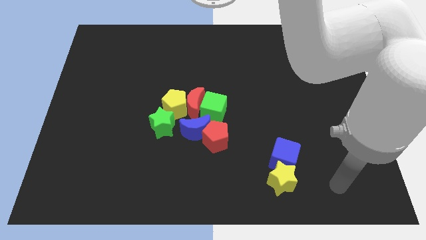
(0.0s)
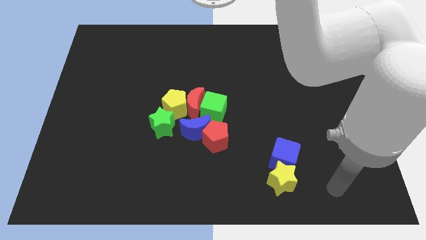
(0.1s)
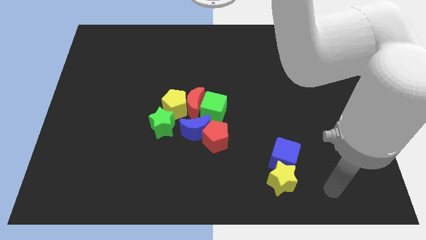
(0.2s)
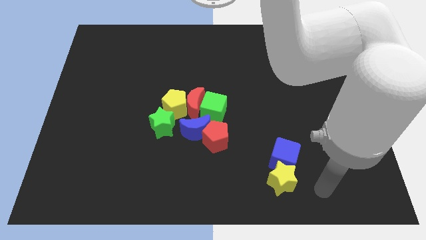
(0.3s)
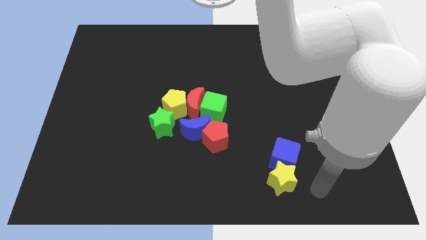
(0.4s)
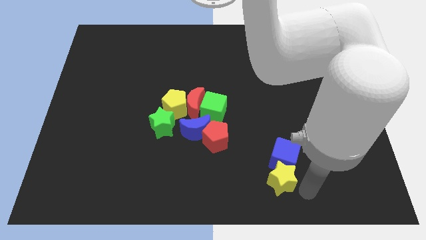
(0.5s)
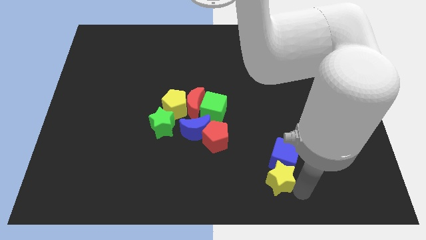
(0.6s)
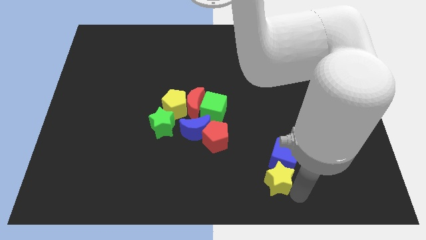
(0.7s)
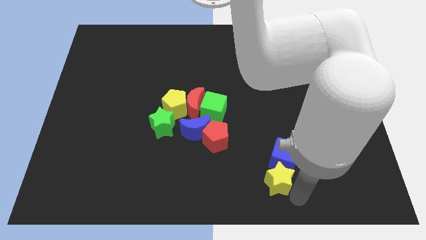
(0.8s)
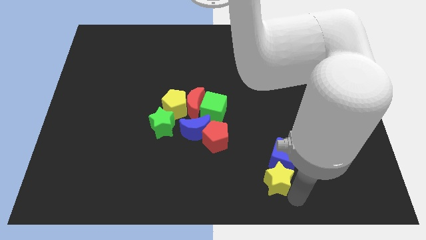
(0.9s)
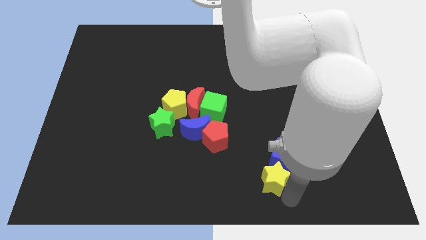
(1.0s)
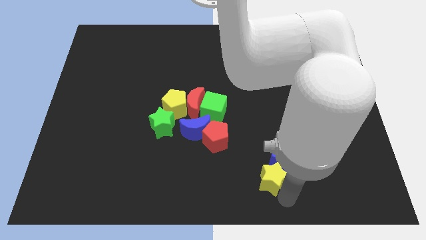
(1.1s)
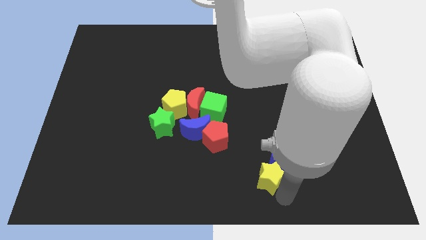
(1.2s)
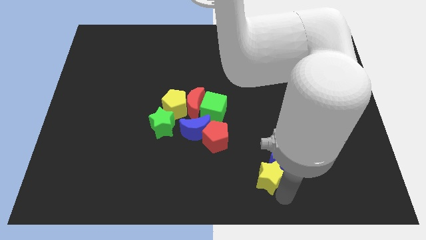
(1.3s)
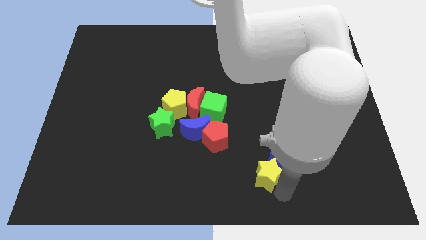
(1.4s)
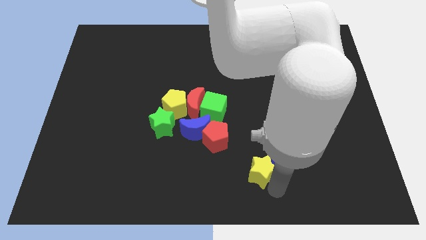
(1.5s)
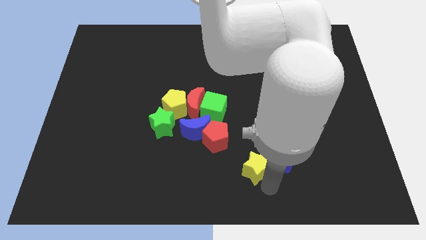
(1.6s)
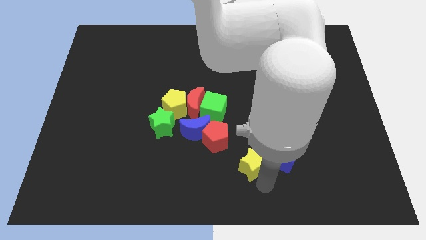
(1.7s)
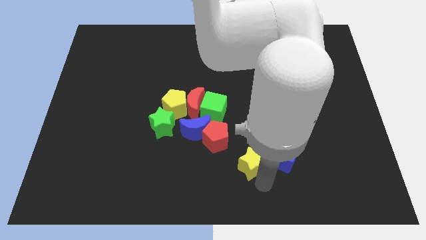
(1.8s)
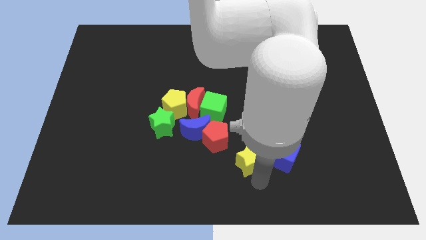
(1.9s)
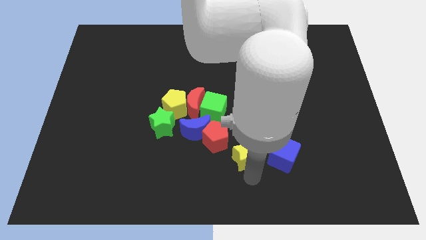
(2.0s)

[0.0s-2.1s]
move the yellow star away from the blue cube

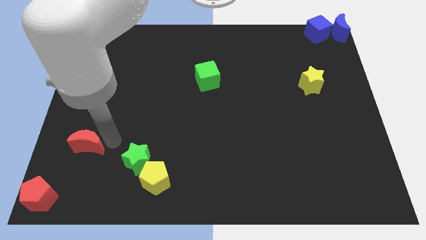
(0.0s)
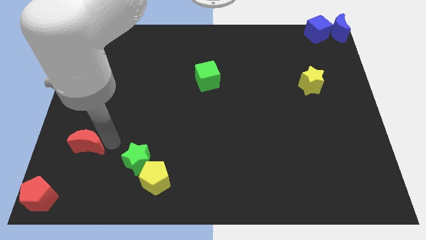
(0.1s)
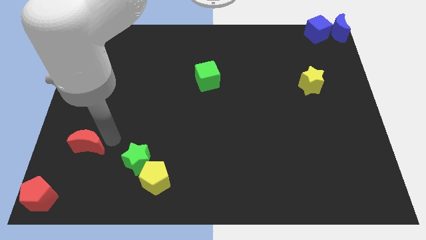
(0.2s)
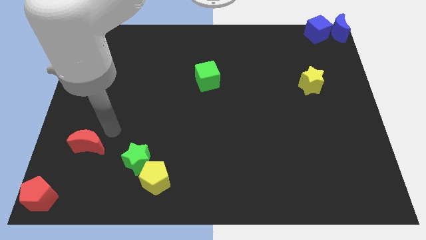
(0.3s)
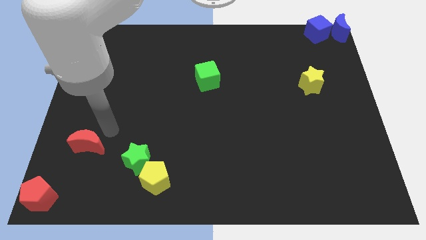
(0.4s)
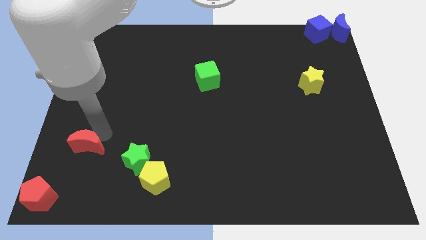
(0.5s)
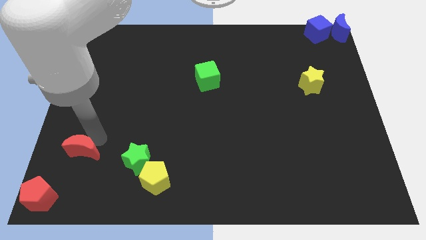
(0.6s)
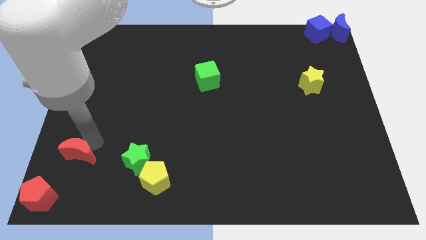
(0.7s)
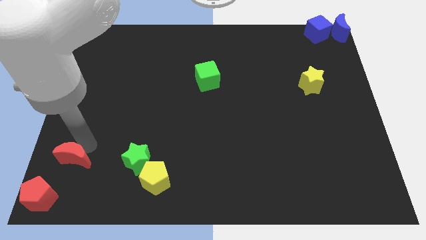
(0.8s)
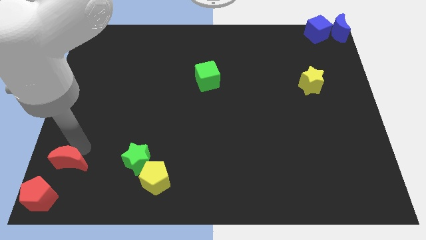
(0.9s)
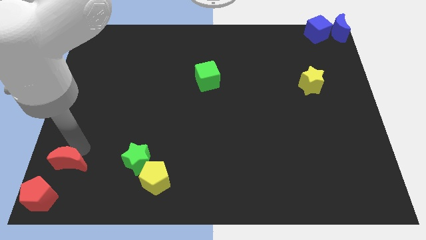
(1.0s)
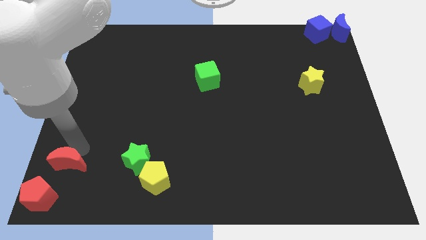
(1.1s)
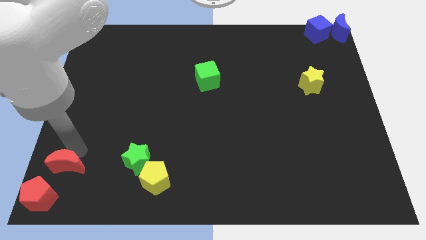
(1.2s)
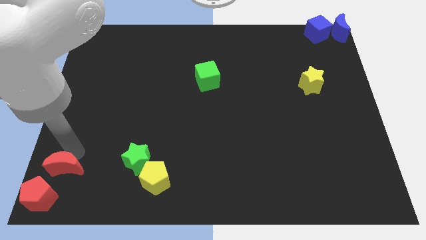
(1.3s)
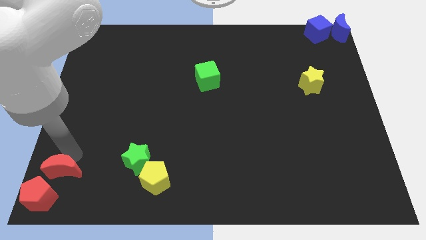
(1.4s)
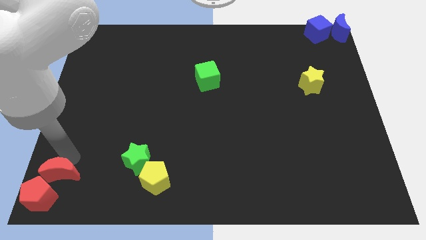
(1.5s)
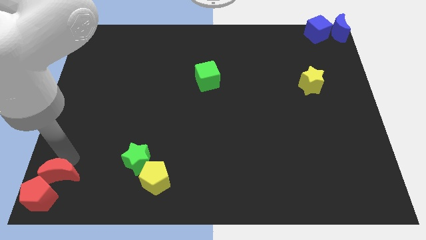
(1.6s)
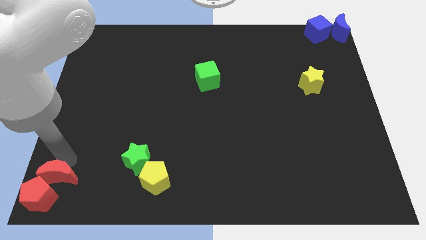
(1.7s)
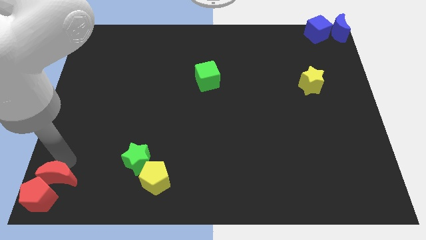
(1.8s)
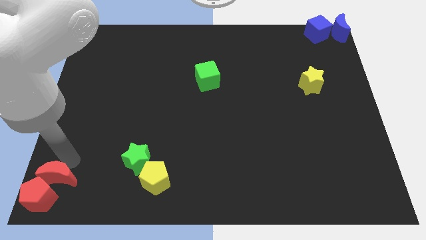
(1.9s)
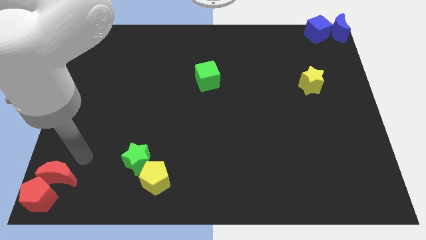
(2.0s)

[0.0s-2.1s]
place the red moon to the top right of the red pentagon

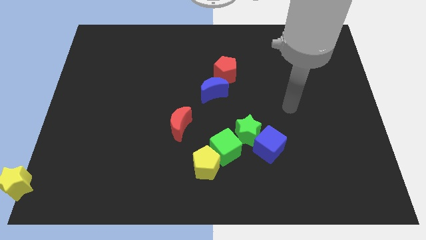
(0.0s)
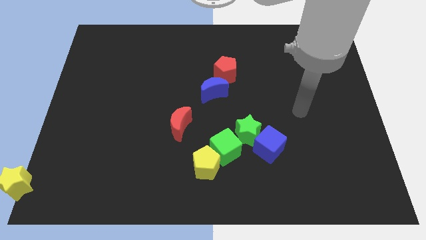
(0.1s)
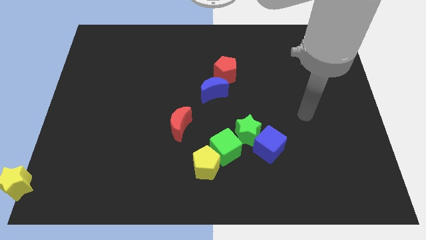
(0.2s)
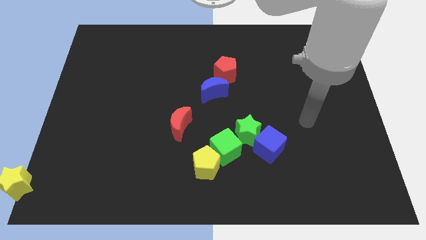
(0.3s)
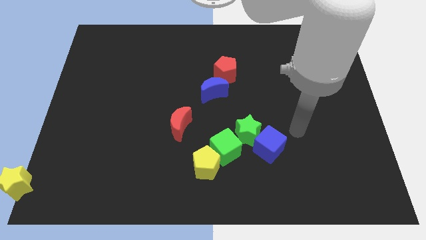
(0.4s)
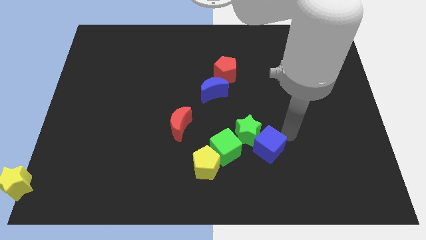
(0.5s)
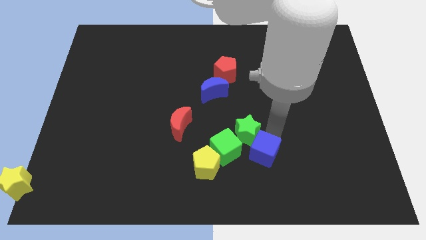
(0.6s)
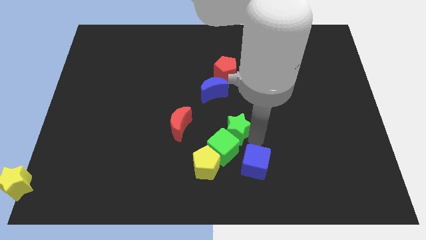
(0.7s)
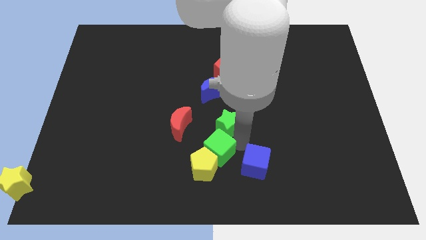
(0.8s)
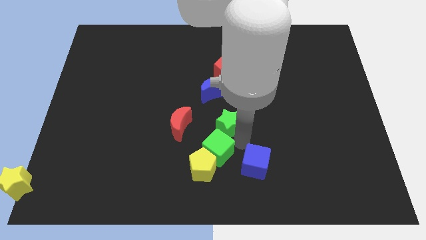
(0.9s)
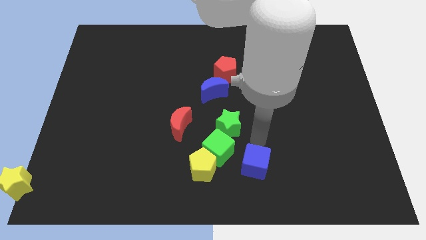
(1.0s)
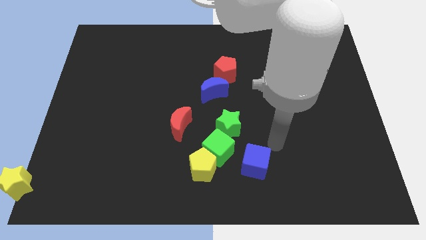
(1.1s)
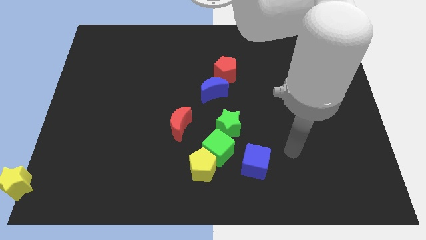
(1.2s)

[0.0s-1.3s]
push blue cube slightly down

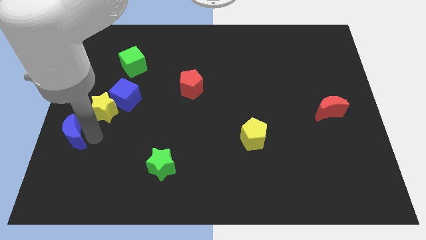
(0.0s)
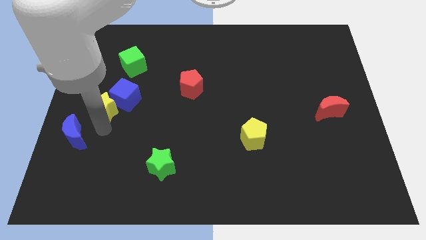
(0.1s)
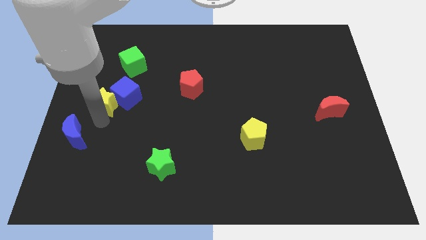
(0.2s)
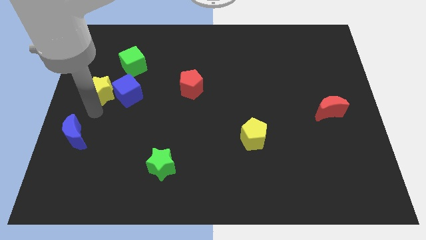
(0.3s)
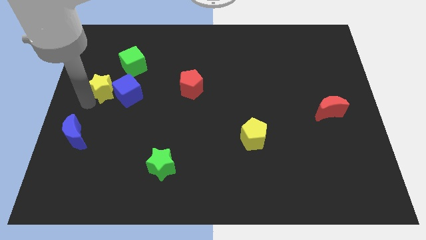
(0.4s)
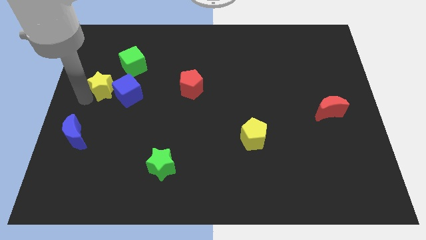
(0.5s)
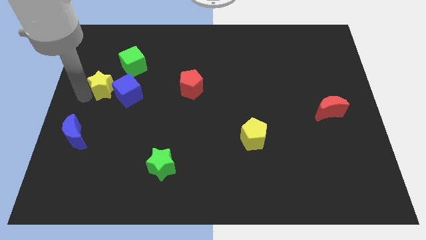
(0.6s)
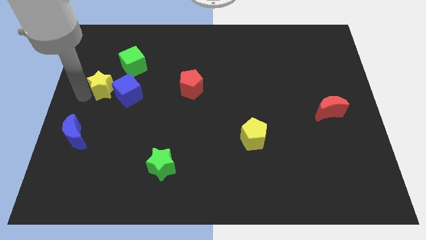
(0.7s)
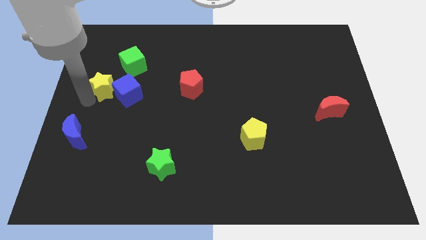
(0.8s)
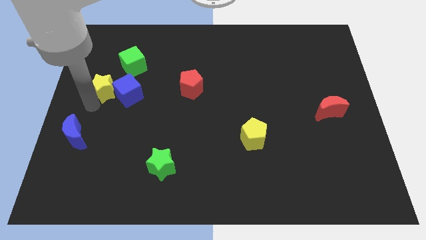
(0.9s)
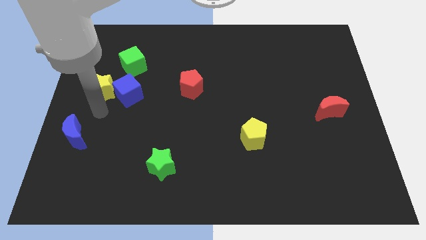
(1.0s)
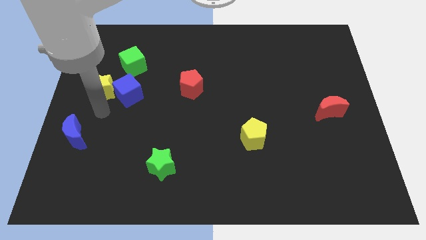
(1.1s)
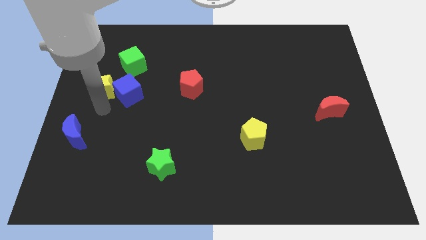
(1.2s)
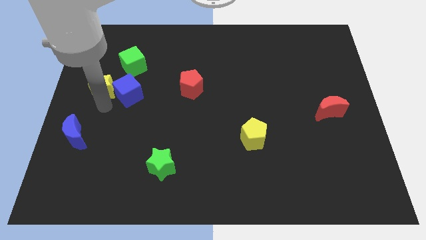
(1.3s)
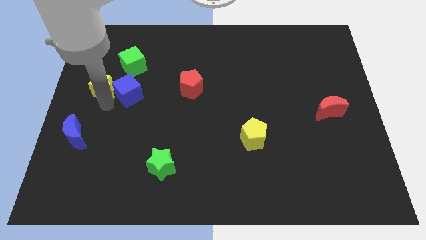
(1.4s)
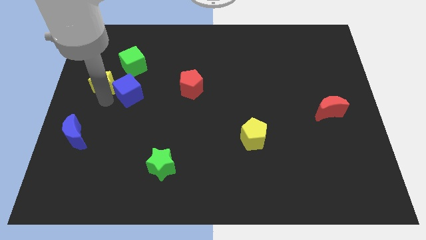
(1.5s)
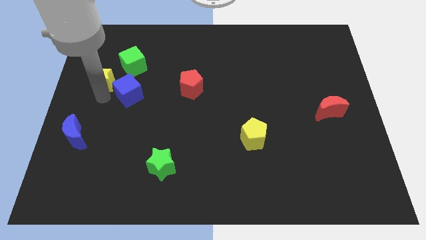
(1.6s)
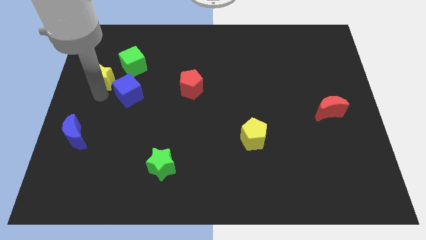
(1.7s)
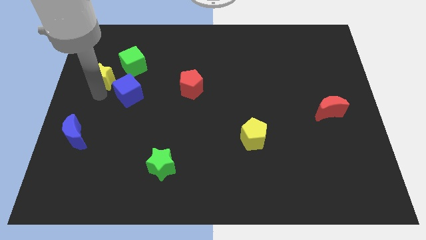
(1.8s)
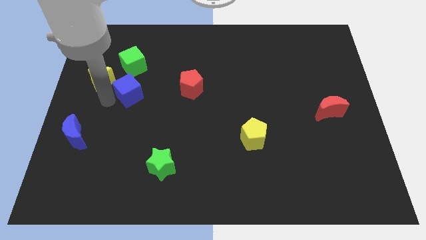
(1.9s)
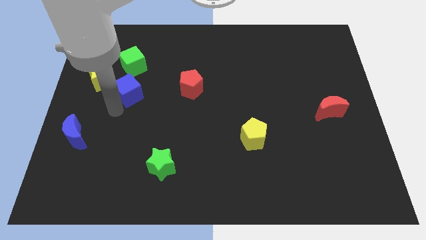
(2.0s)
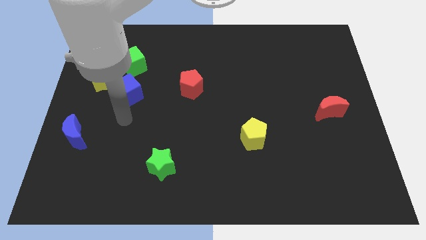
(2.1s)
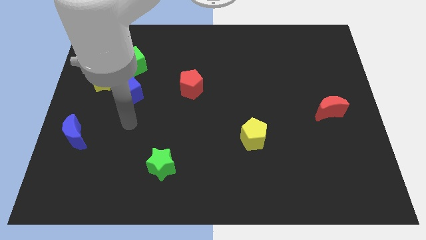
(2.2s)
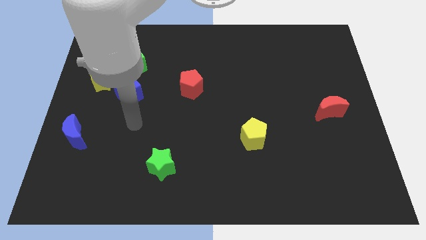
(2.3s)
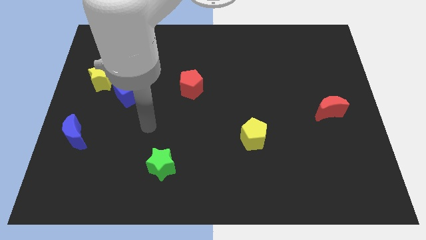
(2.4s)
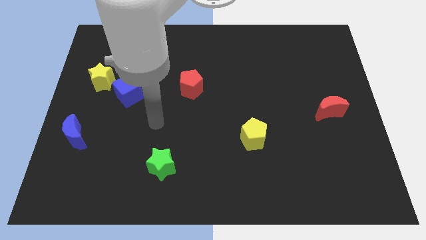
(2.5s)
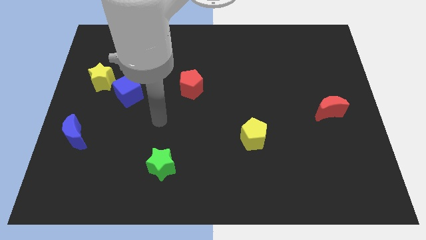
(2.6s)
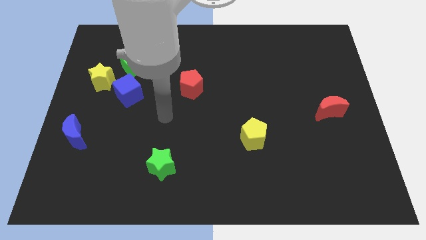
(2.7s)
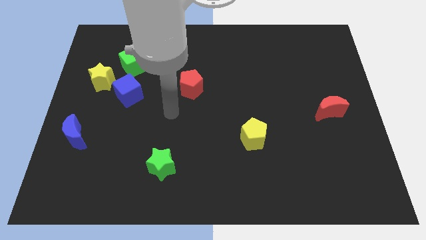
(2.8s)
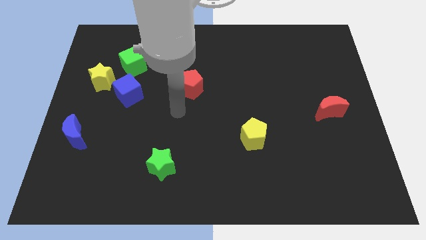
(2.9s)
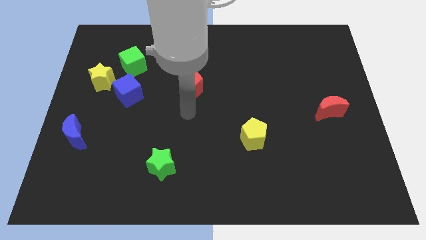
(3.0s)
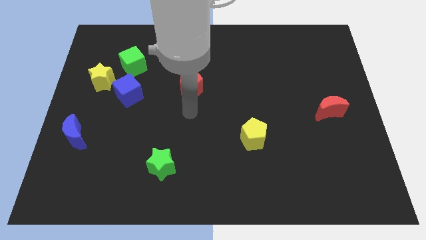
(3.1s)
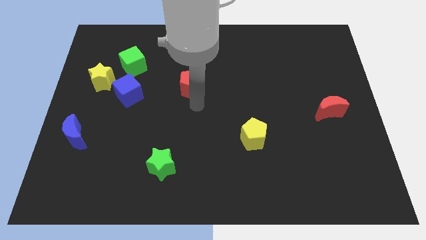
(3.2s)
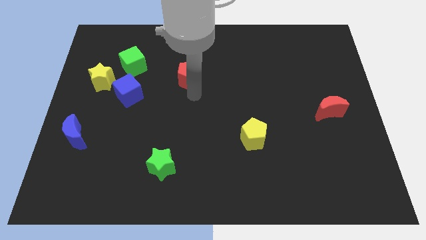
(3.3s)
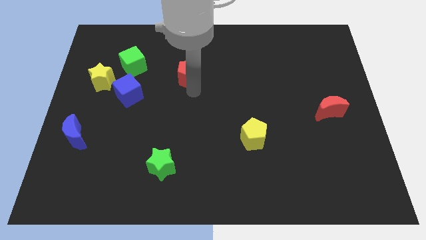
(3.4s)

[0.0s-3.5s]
push the yellow star horizontally to the left side of the red pentagon
